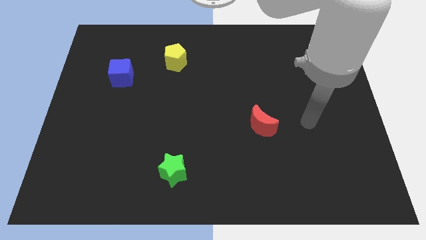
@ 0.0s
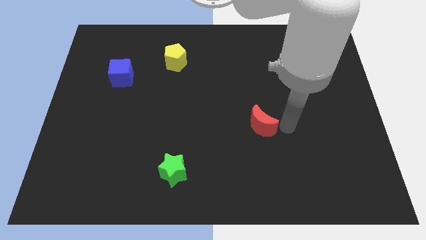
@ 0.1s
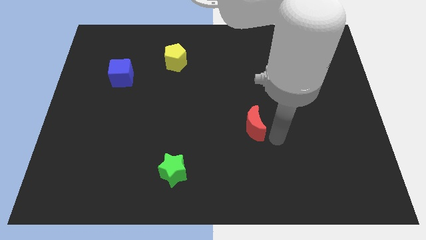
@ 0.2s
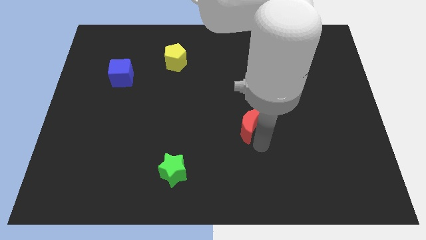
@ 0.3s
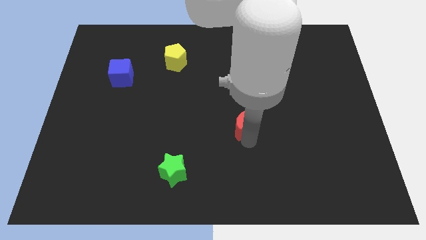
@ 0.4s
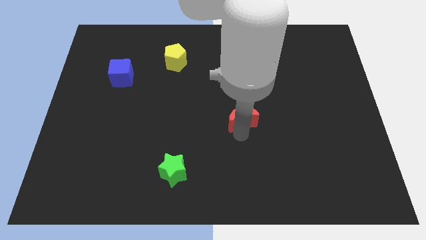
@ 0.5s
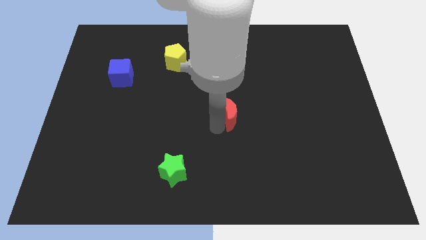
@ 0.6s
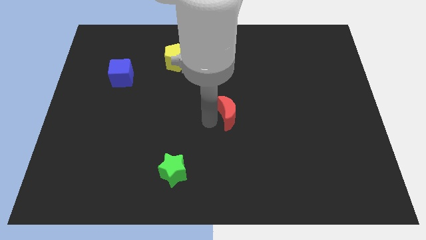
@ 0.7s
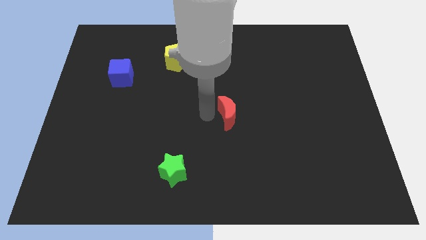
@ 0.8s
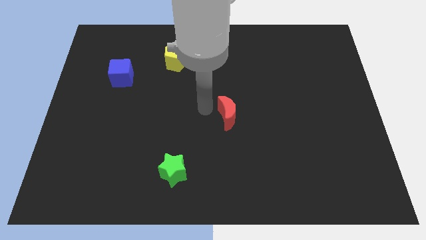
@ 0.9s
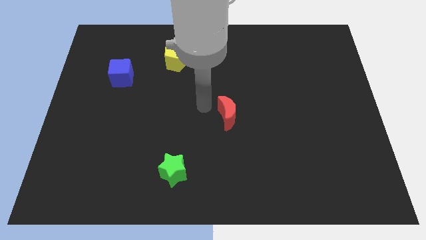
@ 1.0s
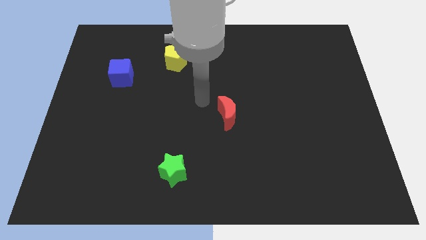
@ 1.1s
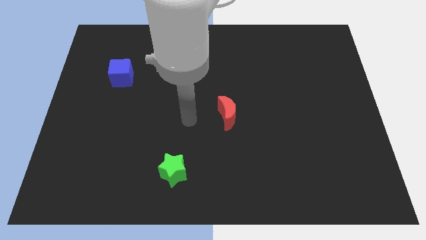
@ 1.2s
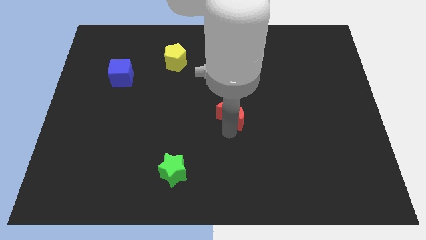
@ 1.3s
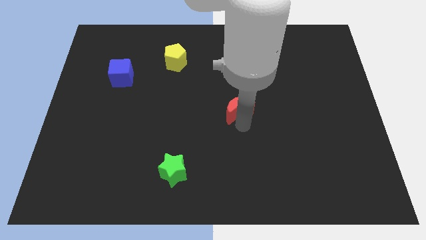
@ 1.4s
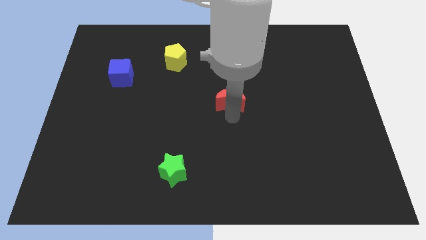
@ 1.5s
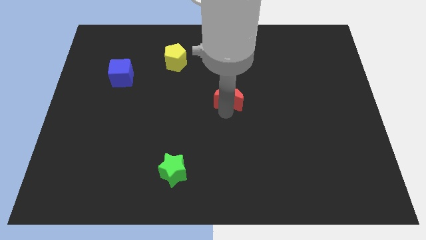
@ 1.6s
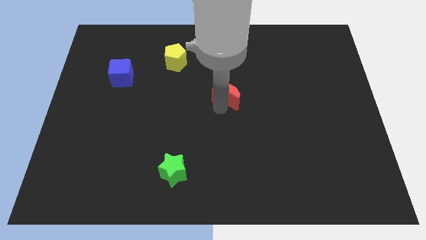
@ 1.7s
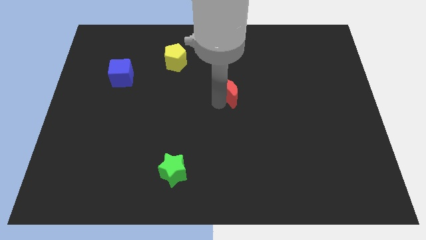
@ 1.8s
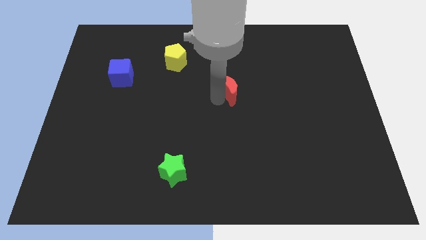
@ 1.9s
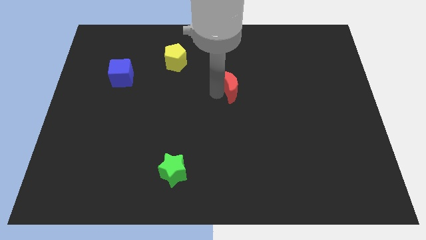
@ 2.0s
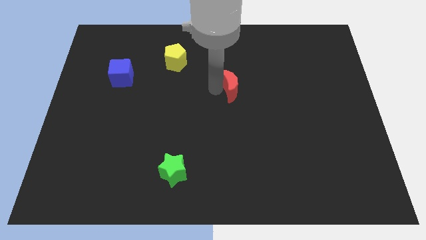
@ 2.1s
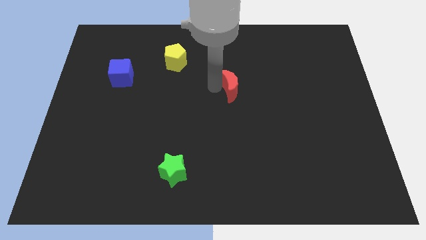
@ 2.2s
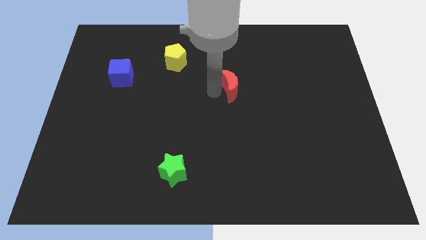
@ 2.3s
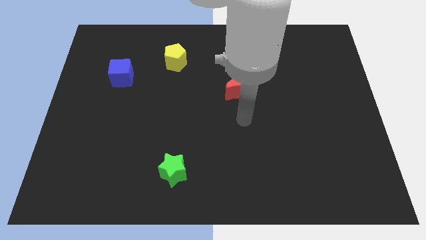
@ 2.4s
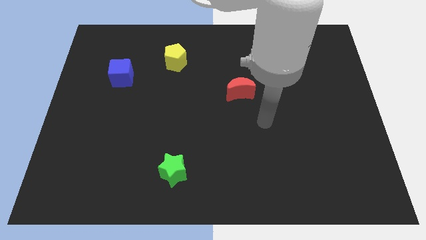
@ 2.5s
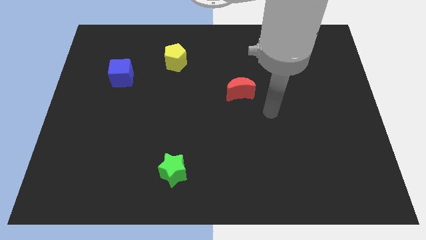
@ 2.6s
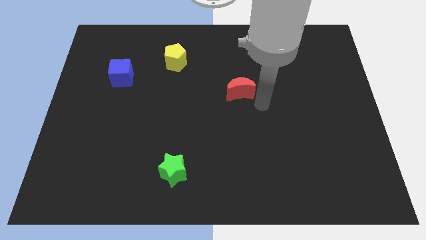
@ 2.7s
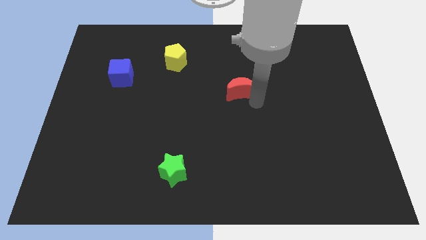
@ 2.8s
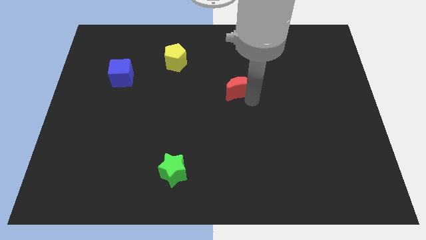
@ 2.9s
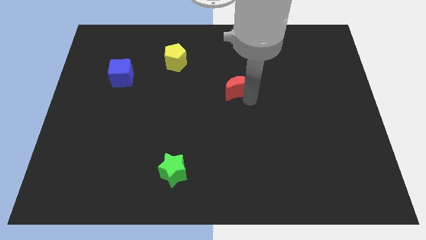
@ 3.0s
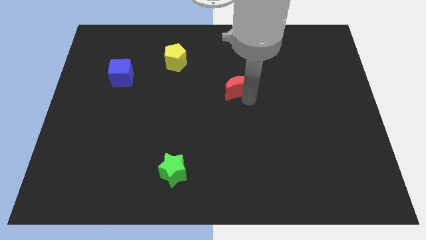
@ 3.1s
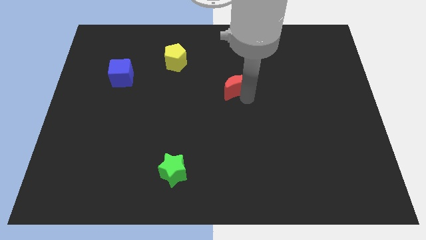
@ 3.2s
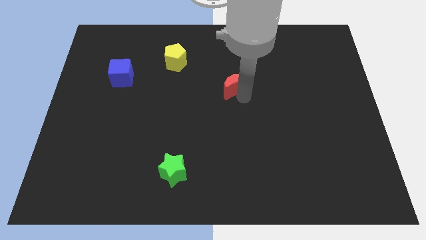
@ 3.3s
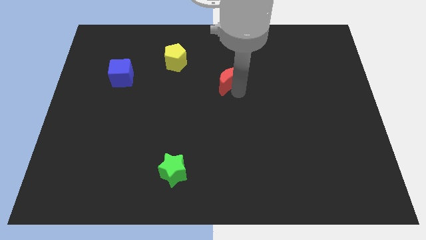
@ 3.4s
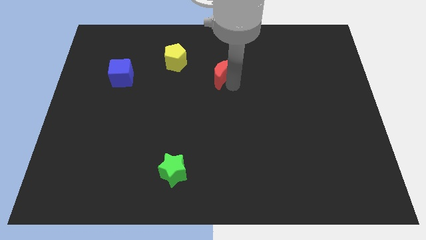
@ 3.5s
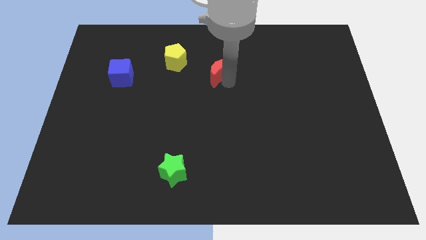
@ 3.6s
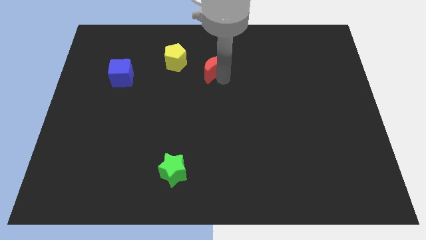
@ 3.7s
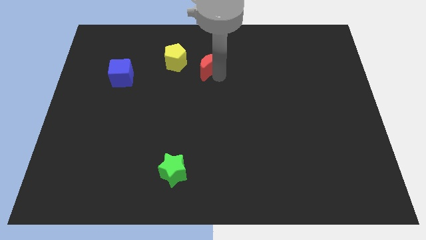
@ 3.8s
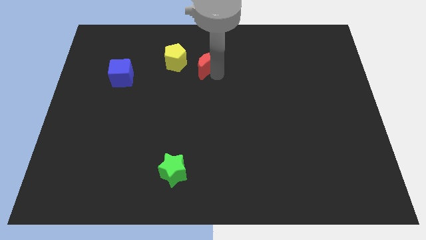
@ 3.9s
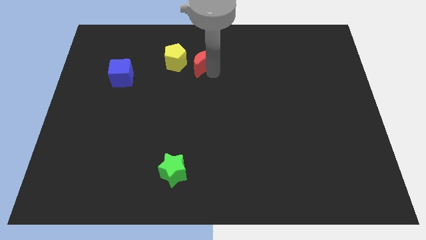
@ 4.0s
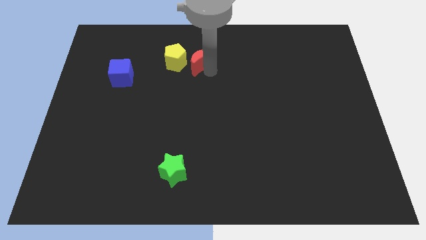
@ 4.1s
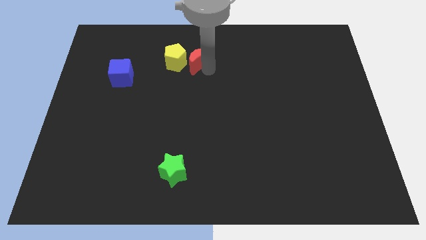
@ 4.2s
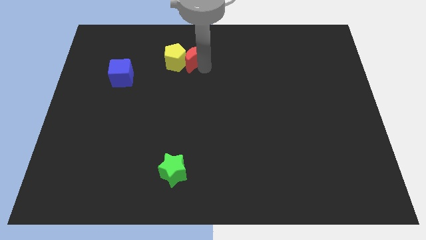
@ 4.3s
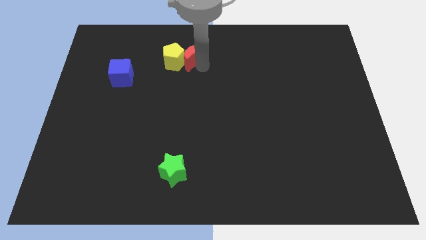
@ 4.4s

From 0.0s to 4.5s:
put the red block next to the yellow pentagon

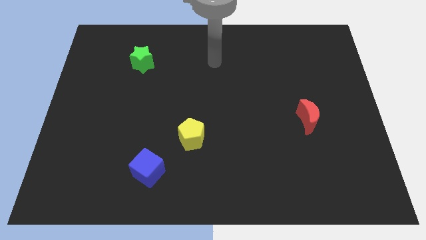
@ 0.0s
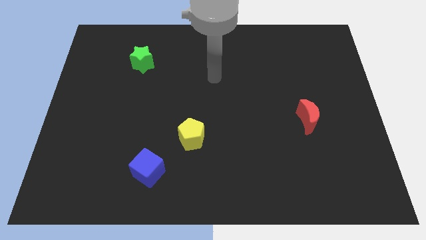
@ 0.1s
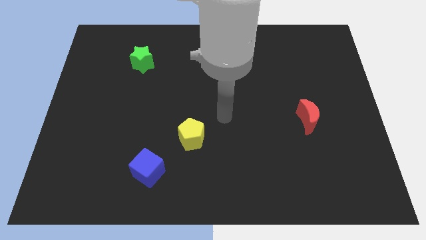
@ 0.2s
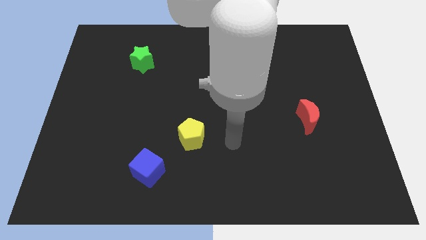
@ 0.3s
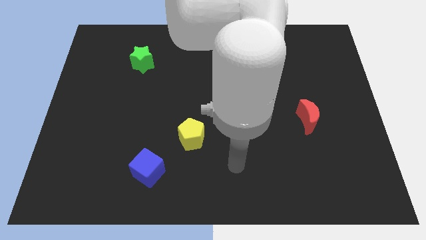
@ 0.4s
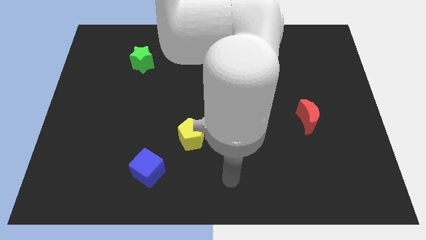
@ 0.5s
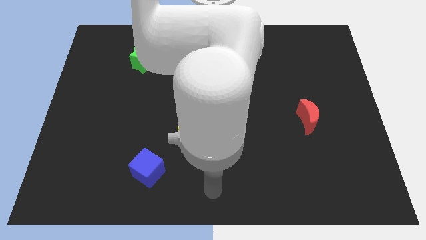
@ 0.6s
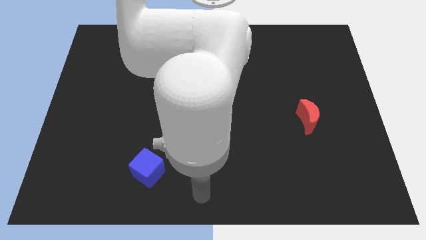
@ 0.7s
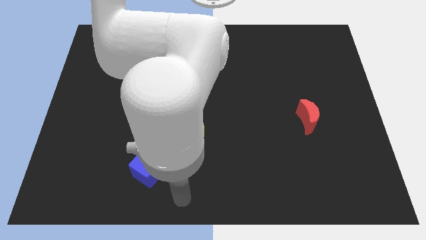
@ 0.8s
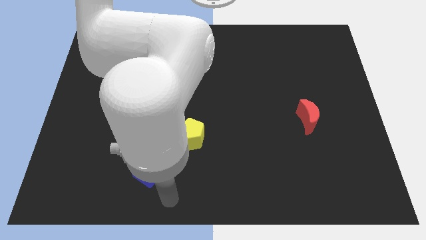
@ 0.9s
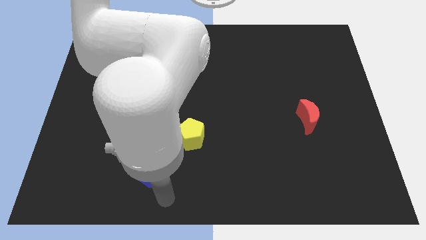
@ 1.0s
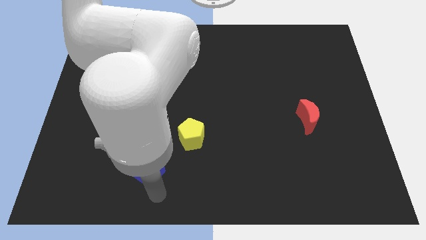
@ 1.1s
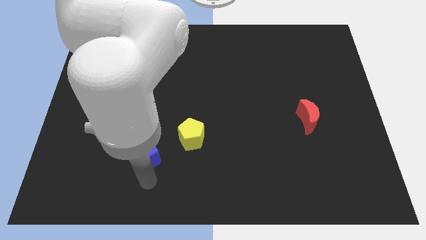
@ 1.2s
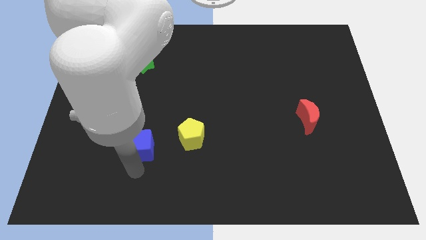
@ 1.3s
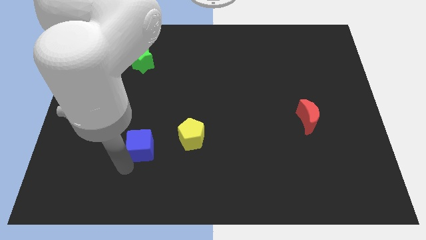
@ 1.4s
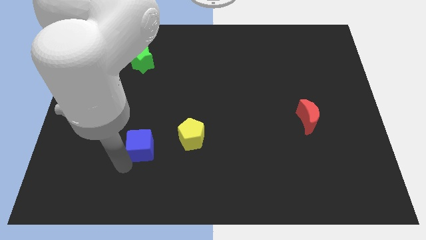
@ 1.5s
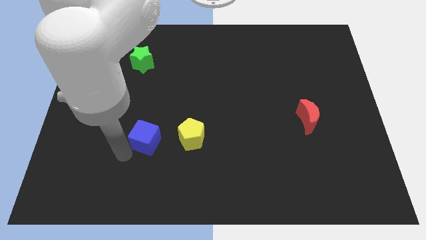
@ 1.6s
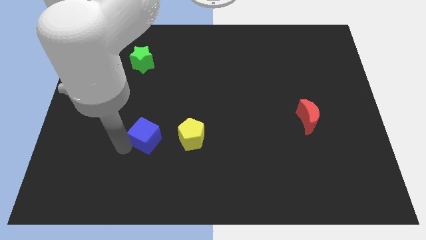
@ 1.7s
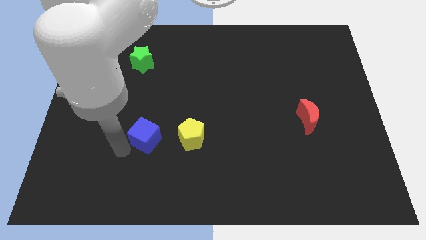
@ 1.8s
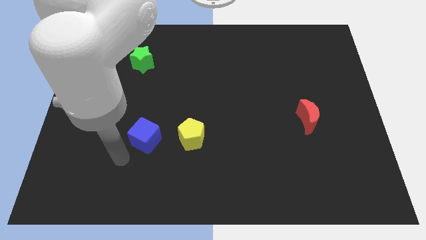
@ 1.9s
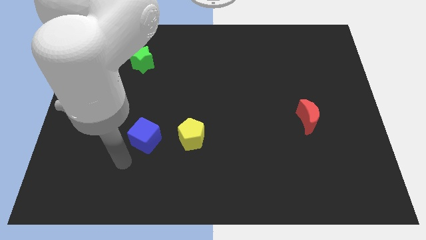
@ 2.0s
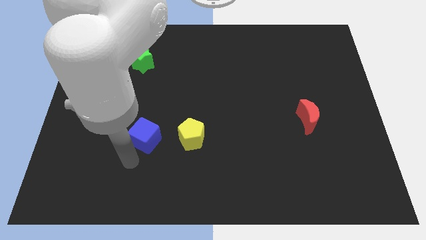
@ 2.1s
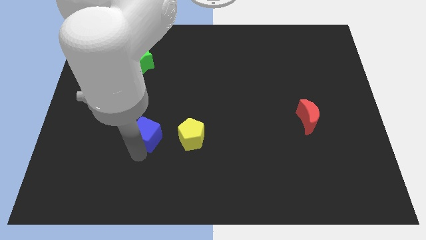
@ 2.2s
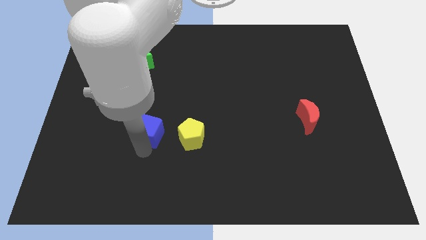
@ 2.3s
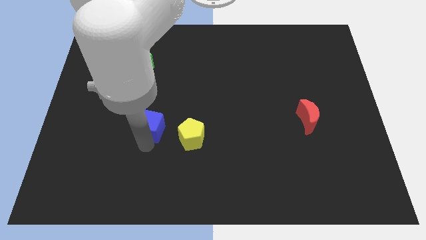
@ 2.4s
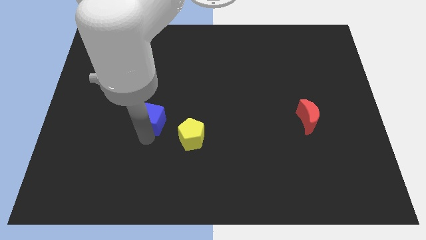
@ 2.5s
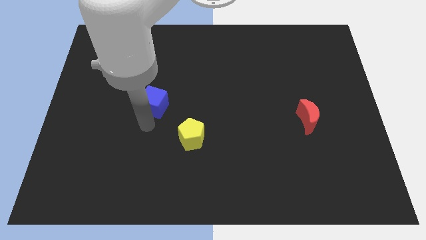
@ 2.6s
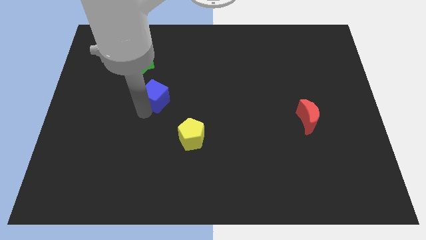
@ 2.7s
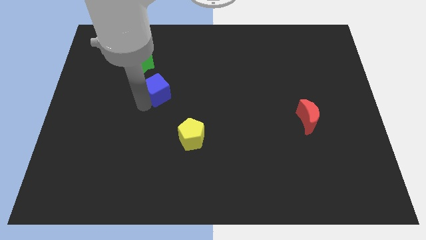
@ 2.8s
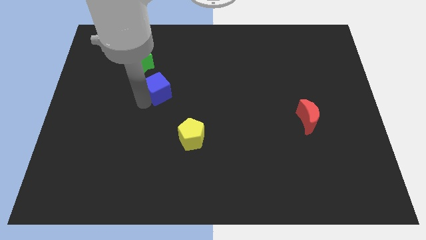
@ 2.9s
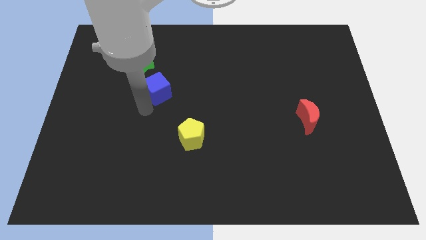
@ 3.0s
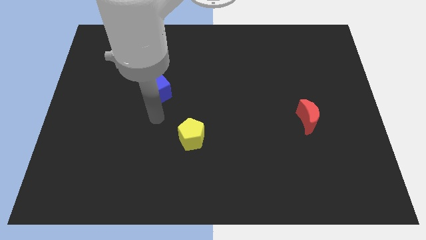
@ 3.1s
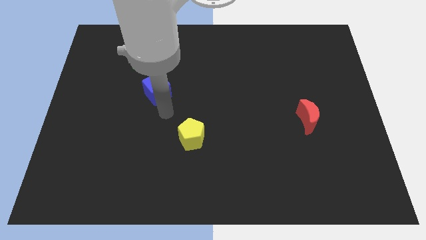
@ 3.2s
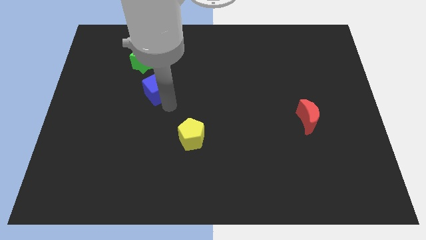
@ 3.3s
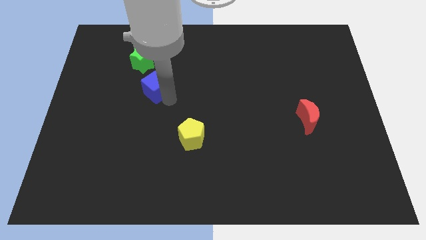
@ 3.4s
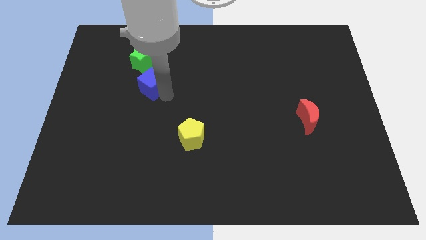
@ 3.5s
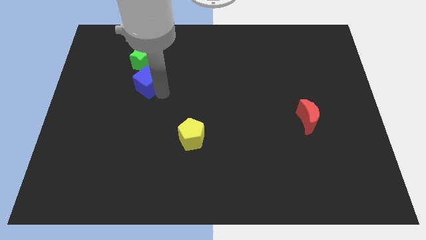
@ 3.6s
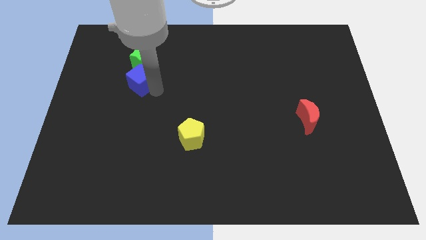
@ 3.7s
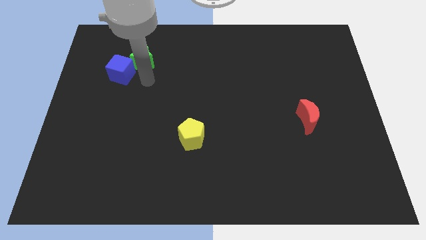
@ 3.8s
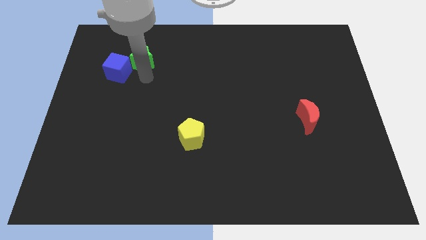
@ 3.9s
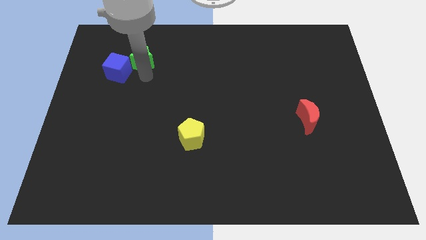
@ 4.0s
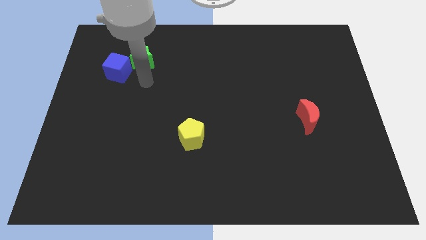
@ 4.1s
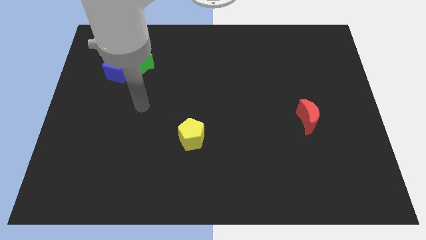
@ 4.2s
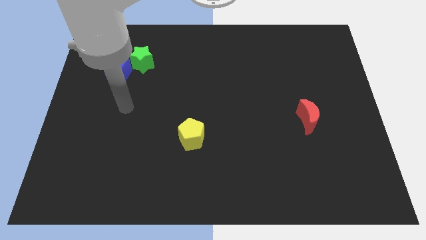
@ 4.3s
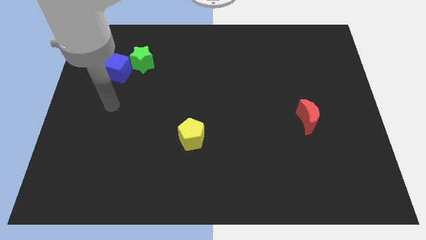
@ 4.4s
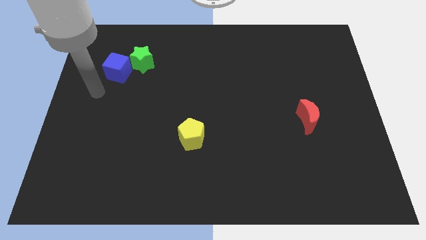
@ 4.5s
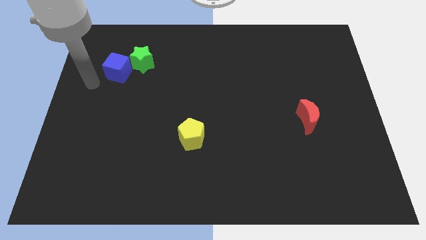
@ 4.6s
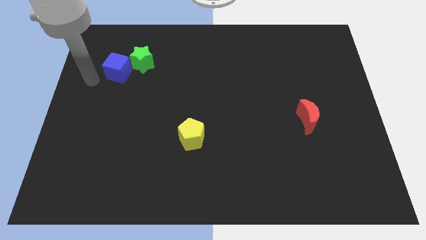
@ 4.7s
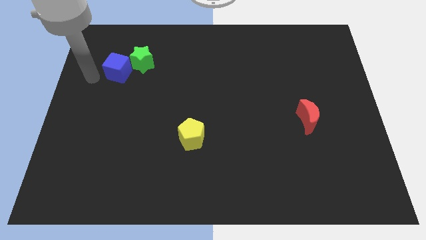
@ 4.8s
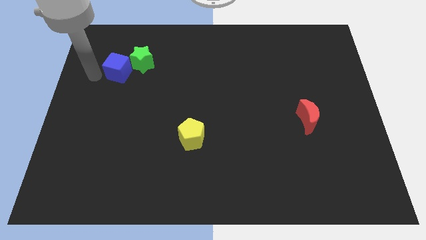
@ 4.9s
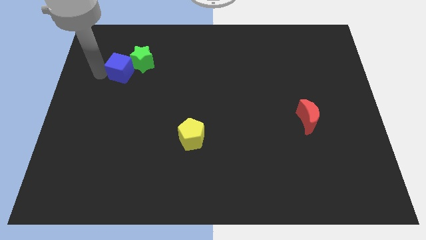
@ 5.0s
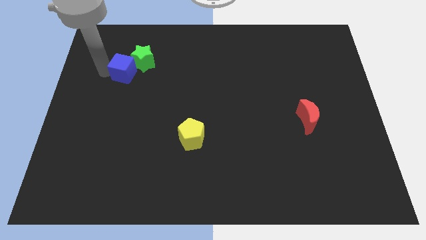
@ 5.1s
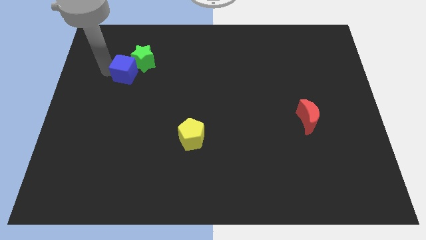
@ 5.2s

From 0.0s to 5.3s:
slide the cube towards the green star
